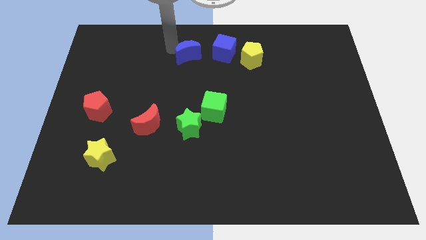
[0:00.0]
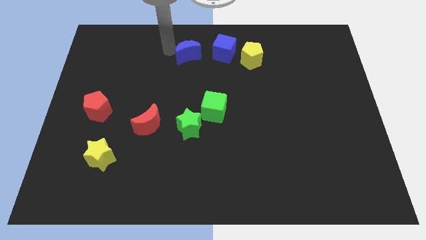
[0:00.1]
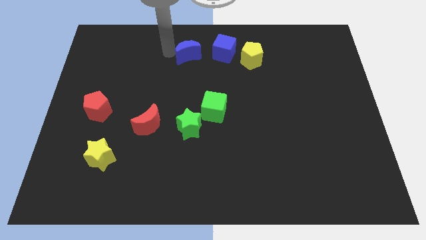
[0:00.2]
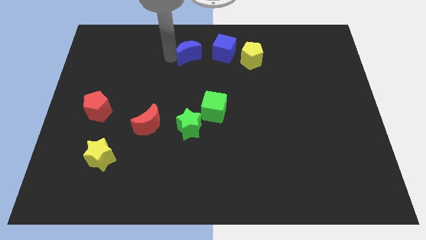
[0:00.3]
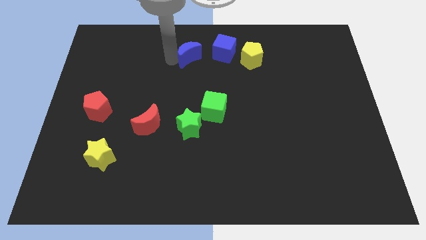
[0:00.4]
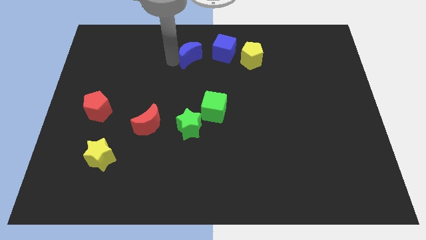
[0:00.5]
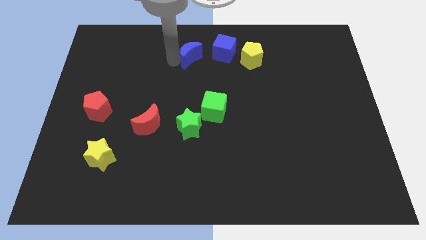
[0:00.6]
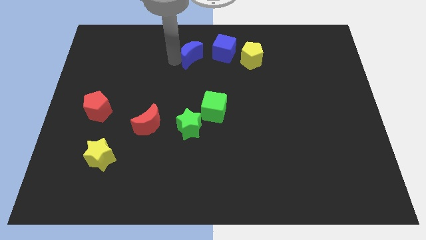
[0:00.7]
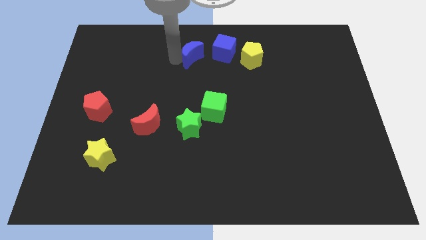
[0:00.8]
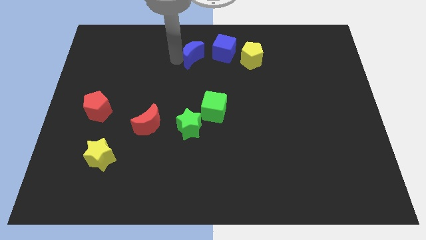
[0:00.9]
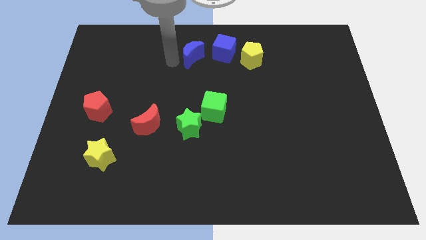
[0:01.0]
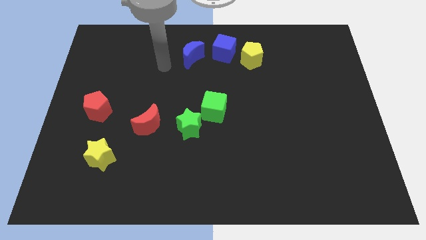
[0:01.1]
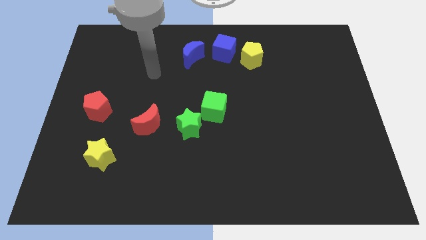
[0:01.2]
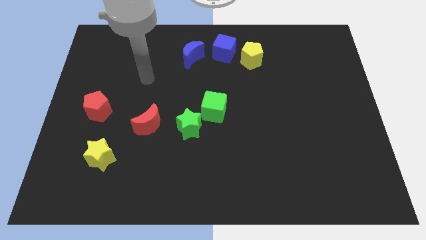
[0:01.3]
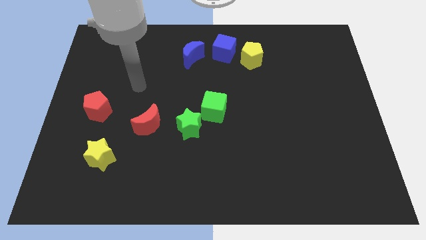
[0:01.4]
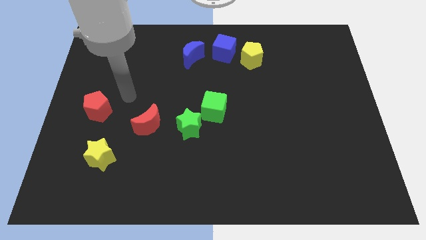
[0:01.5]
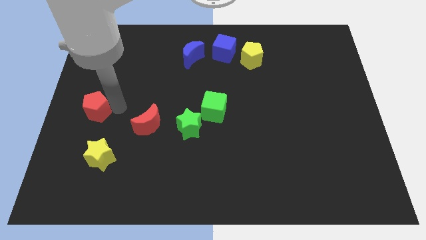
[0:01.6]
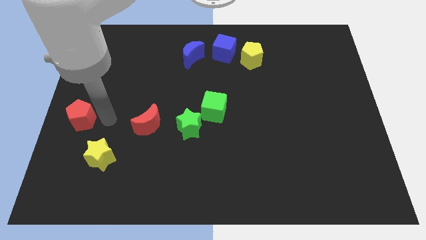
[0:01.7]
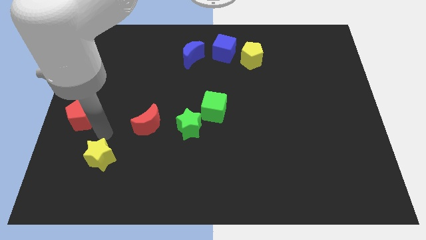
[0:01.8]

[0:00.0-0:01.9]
push blue crescent slightly below blue cube

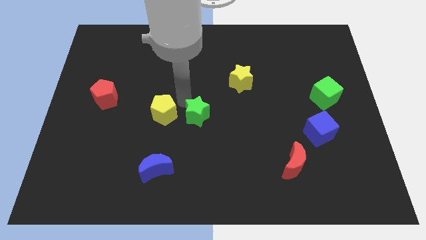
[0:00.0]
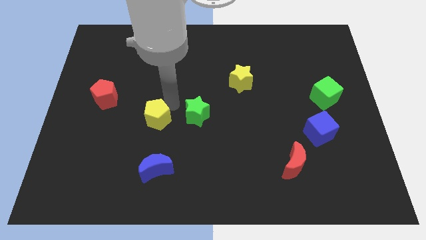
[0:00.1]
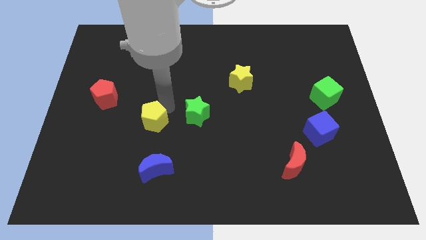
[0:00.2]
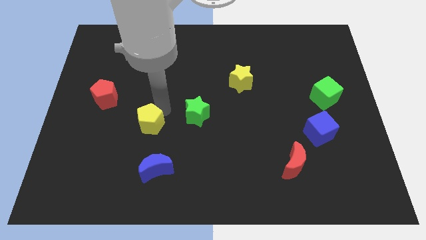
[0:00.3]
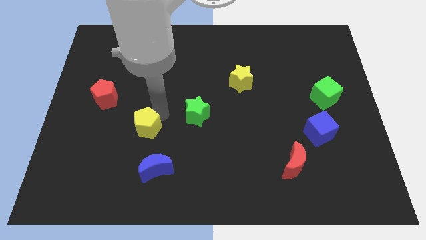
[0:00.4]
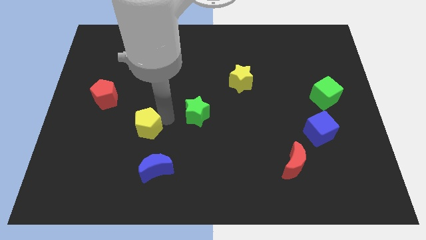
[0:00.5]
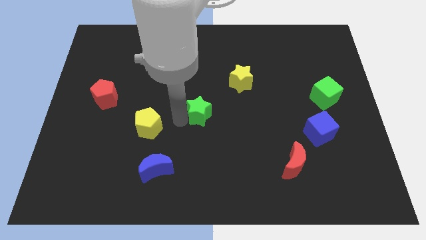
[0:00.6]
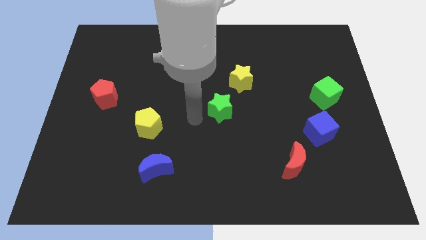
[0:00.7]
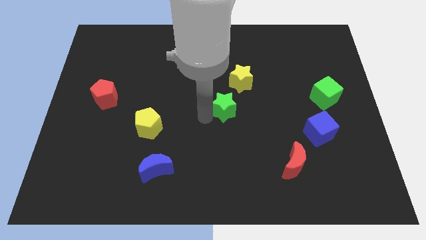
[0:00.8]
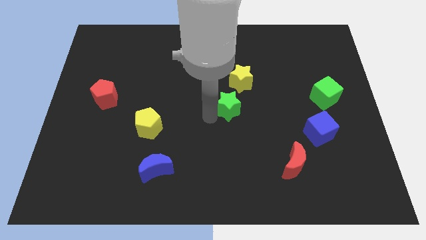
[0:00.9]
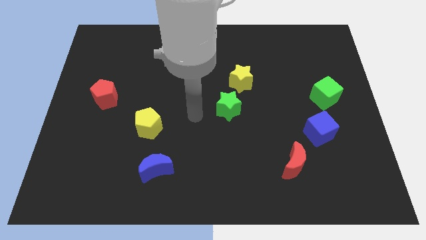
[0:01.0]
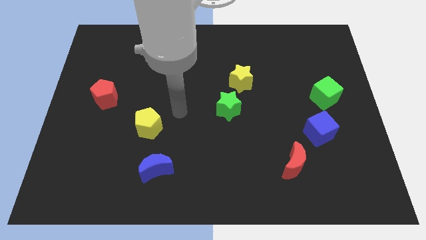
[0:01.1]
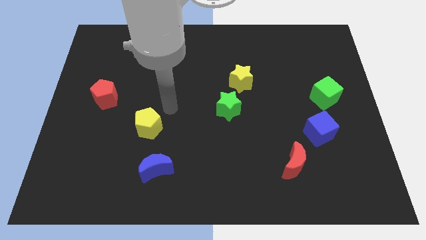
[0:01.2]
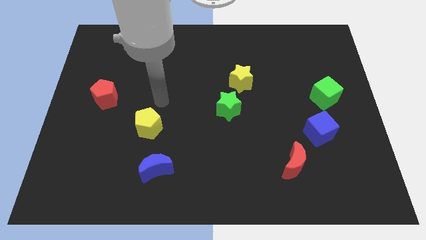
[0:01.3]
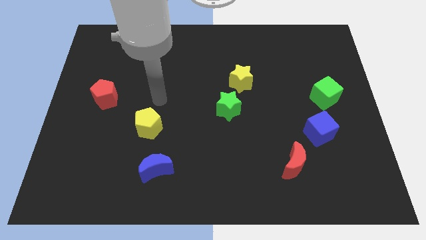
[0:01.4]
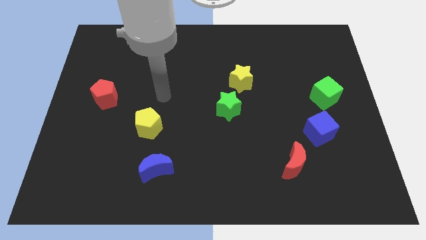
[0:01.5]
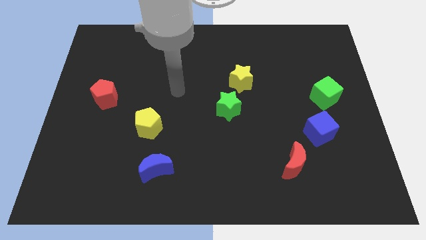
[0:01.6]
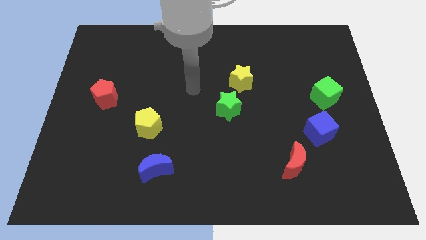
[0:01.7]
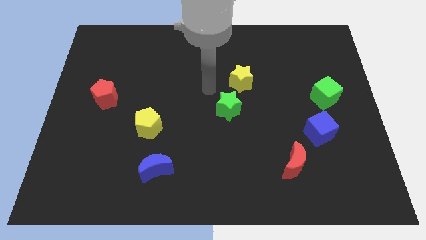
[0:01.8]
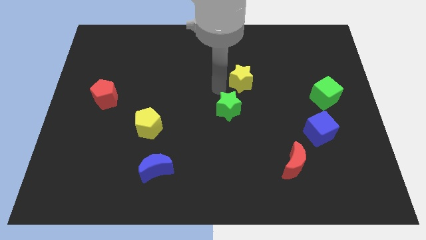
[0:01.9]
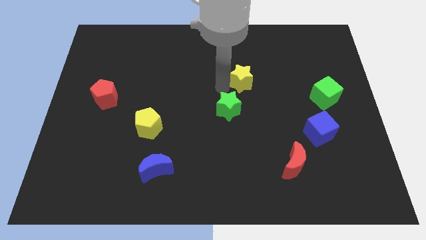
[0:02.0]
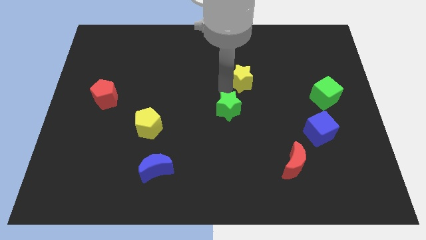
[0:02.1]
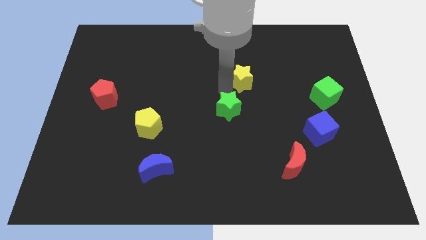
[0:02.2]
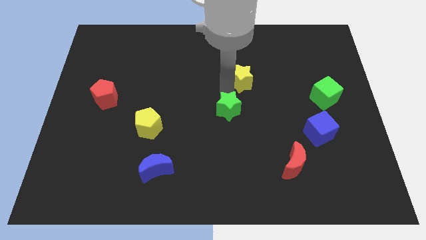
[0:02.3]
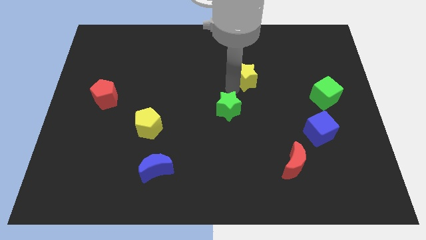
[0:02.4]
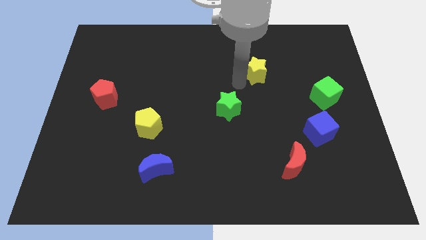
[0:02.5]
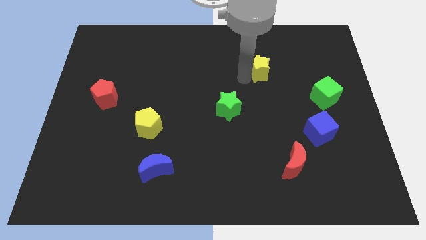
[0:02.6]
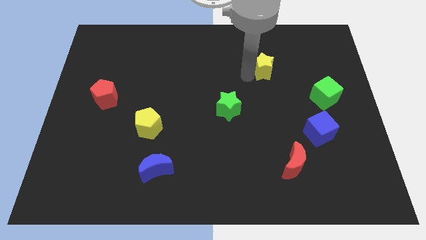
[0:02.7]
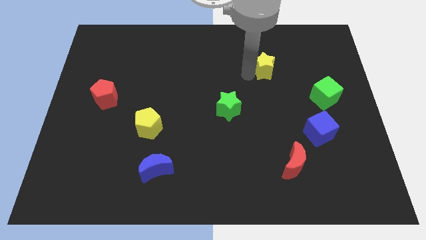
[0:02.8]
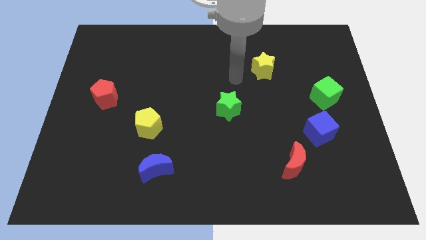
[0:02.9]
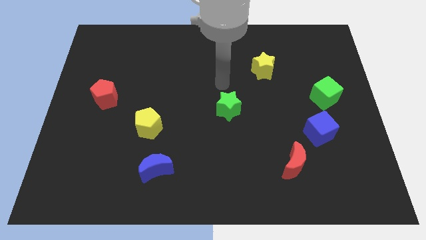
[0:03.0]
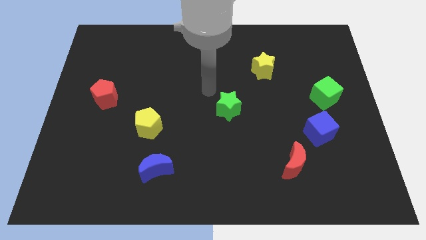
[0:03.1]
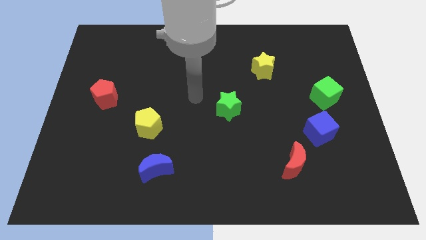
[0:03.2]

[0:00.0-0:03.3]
separate the yellow pentagon and yellow star from the green star

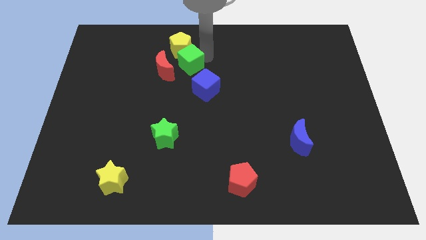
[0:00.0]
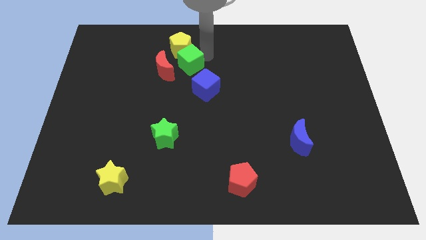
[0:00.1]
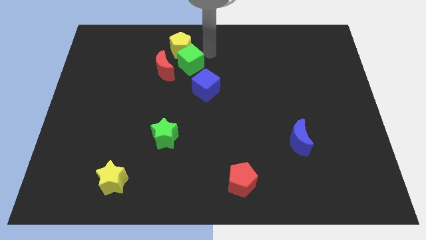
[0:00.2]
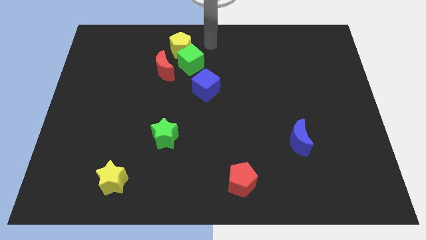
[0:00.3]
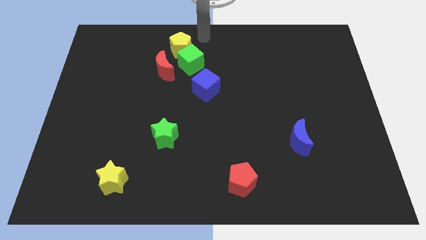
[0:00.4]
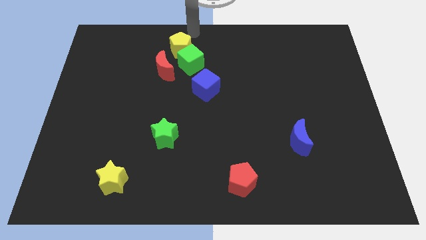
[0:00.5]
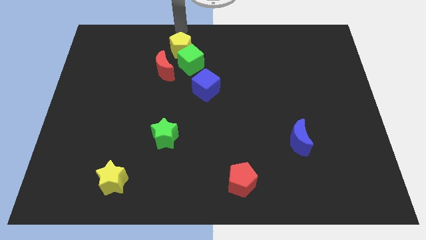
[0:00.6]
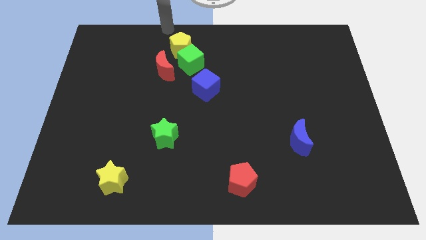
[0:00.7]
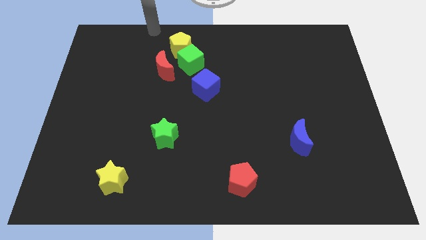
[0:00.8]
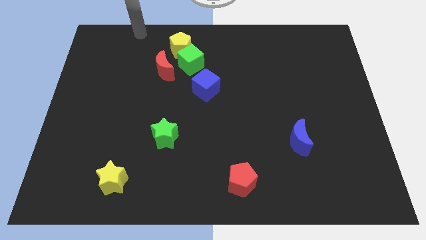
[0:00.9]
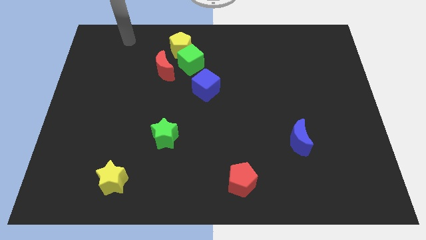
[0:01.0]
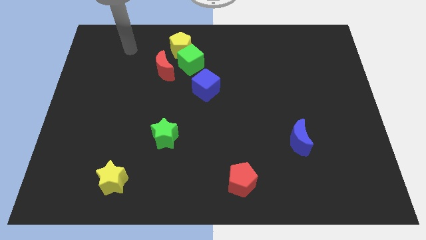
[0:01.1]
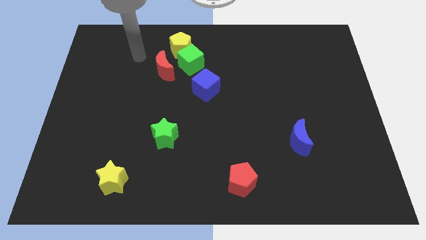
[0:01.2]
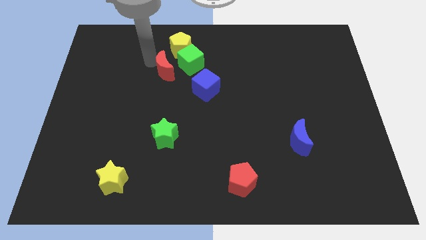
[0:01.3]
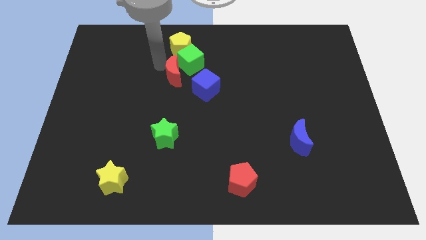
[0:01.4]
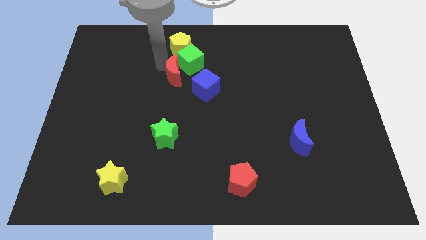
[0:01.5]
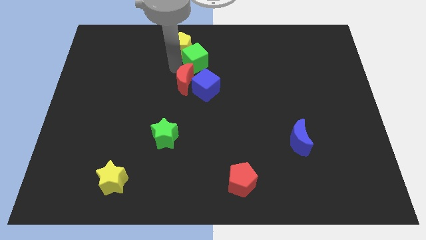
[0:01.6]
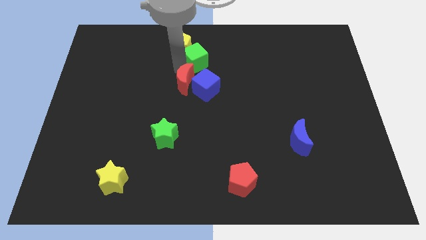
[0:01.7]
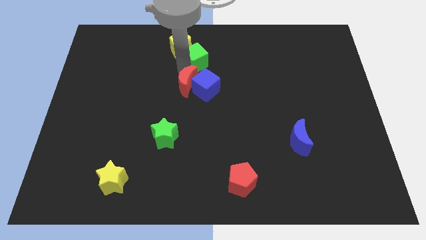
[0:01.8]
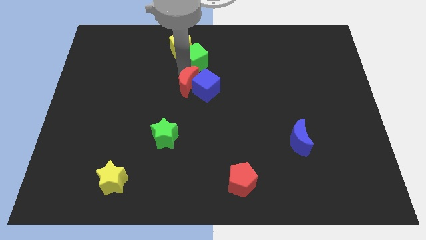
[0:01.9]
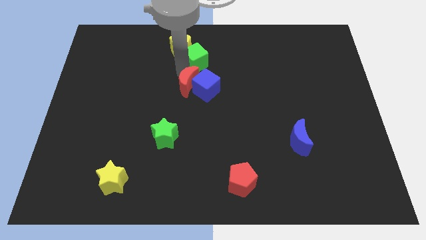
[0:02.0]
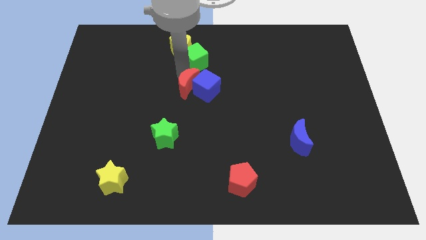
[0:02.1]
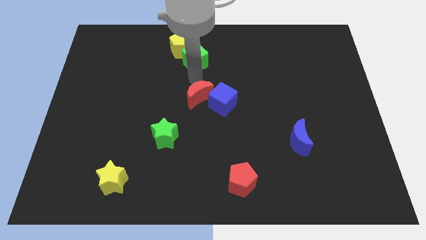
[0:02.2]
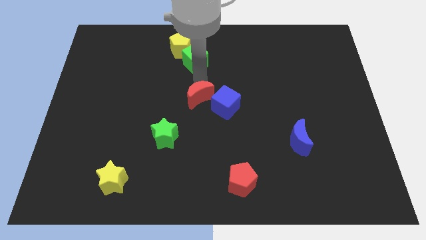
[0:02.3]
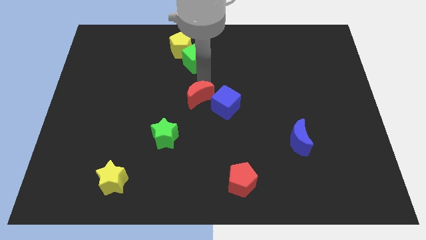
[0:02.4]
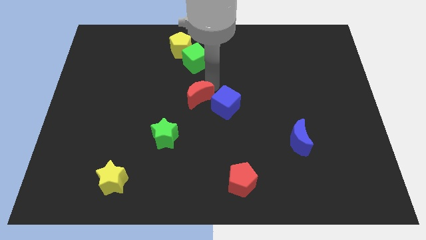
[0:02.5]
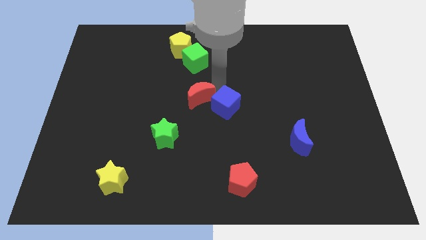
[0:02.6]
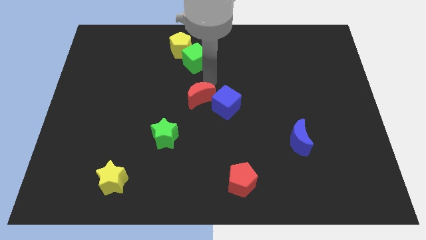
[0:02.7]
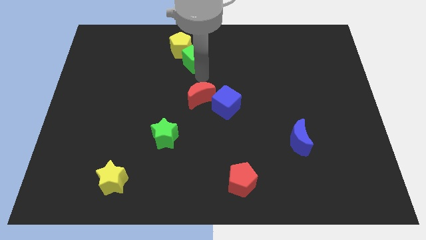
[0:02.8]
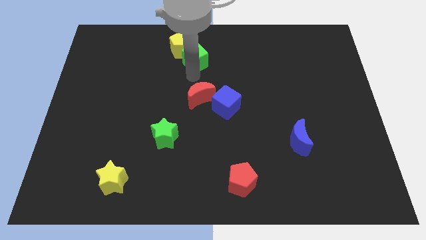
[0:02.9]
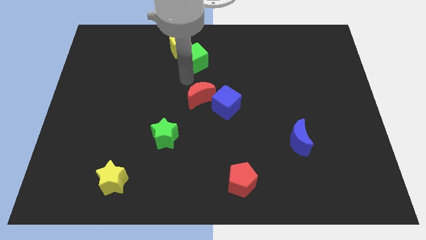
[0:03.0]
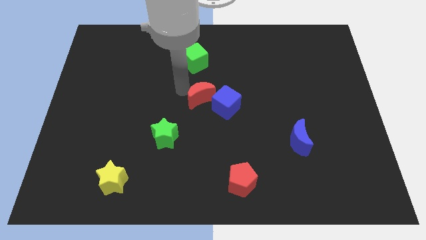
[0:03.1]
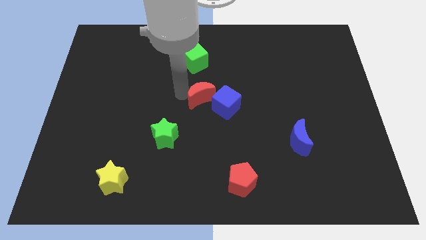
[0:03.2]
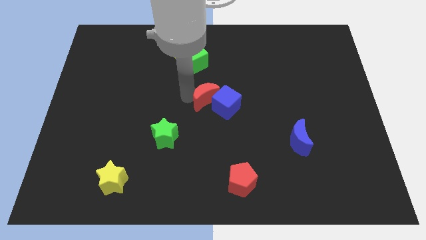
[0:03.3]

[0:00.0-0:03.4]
move red moon into blue cube

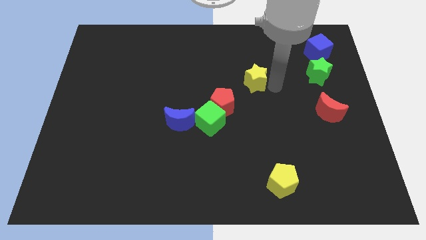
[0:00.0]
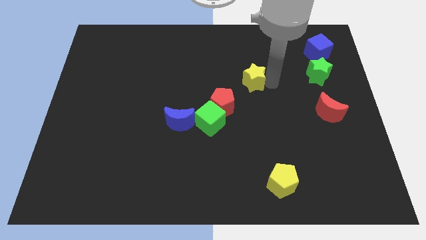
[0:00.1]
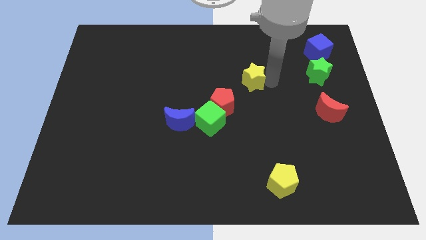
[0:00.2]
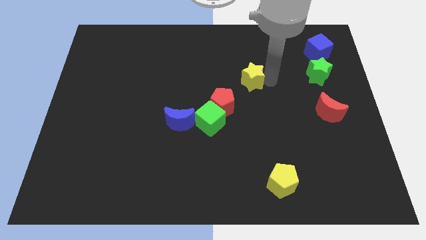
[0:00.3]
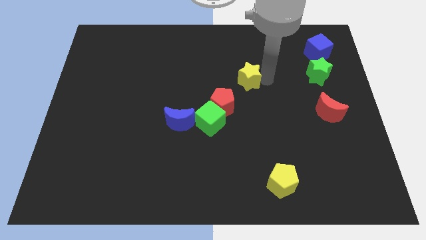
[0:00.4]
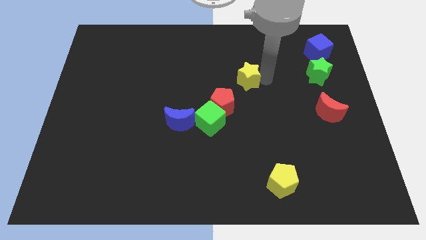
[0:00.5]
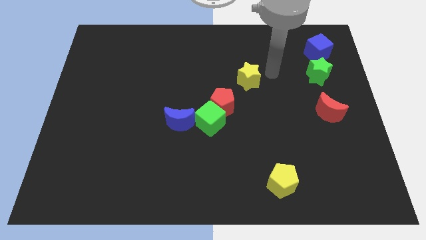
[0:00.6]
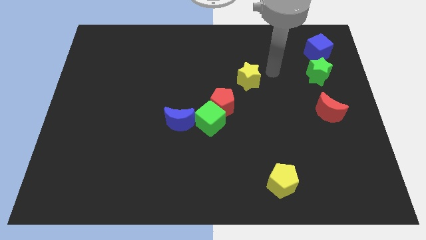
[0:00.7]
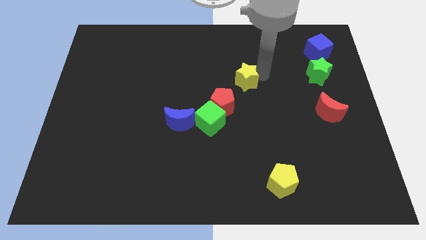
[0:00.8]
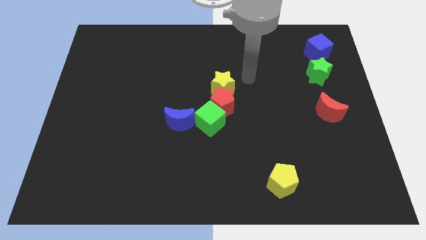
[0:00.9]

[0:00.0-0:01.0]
put yellow star above red pentagon
